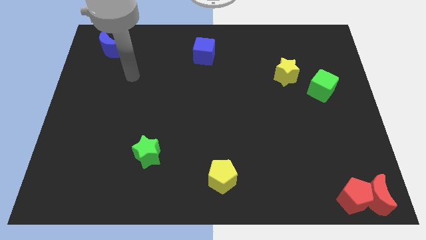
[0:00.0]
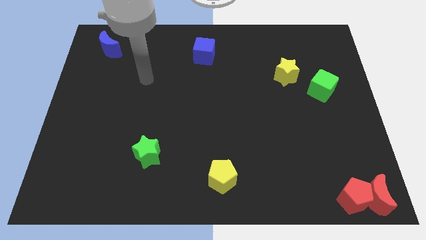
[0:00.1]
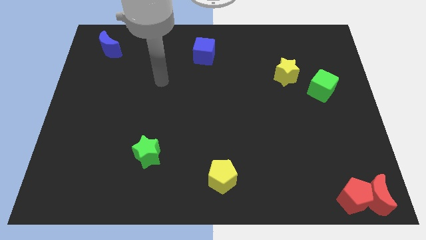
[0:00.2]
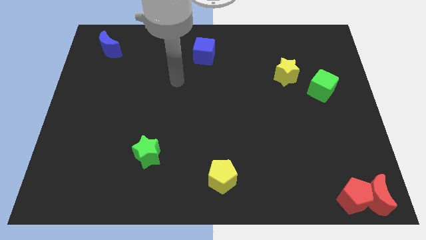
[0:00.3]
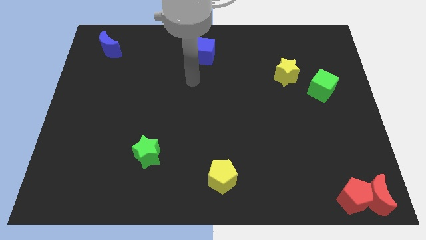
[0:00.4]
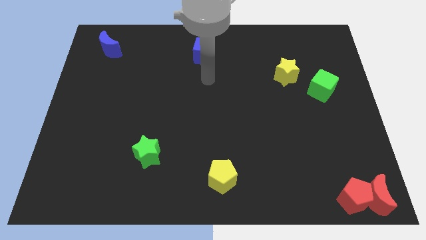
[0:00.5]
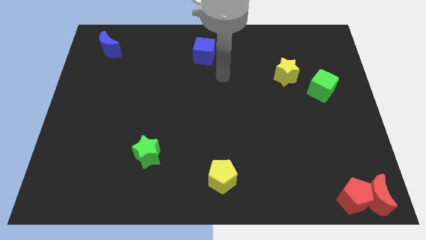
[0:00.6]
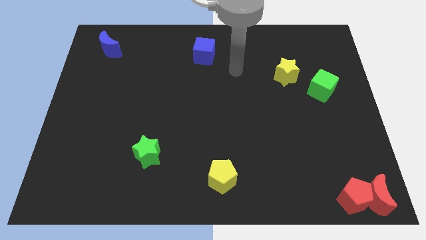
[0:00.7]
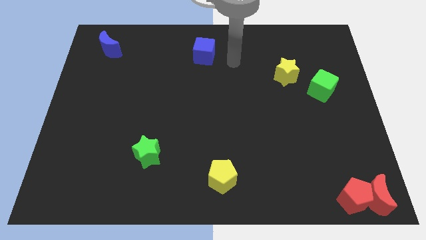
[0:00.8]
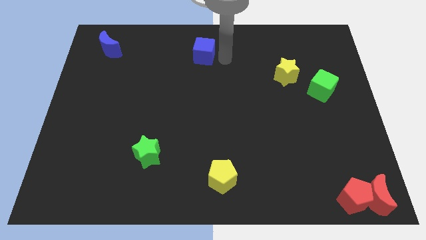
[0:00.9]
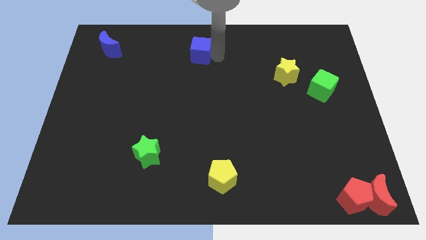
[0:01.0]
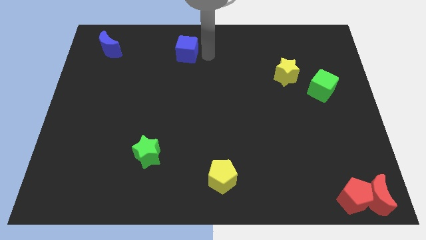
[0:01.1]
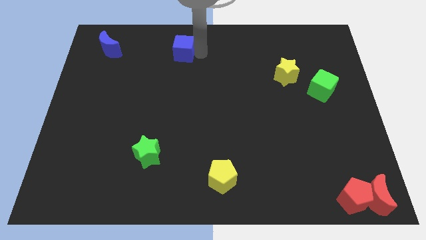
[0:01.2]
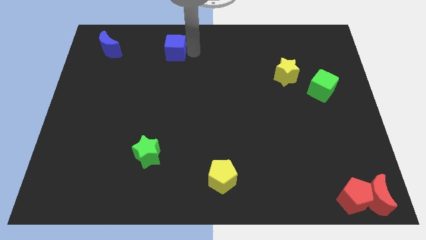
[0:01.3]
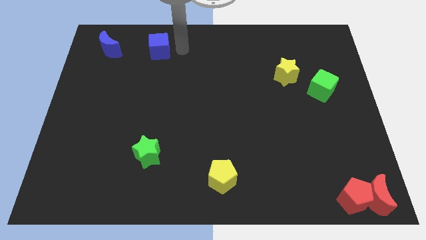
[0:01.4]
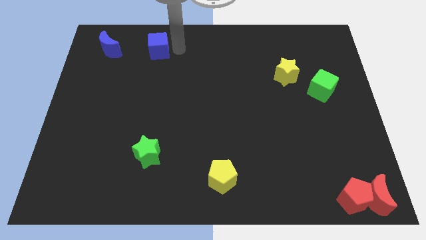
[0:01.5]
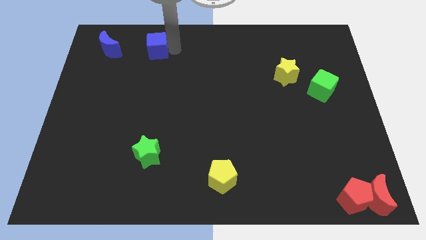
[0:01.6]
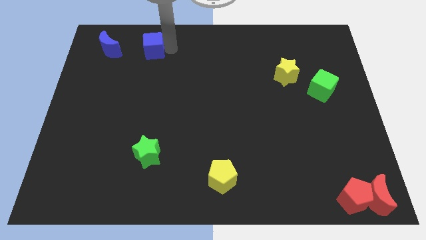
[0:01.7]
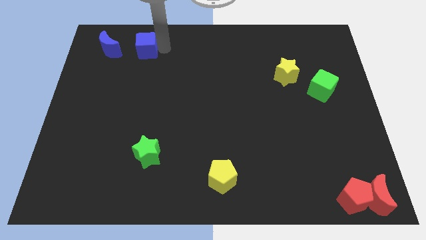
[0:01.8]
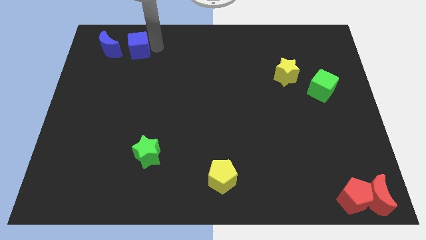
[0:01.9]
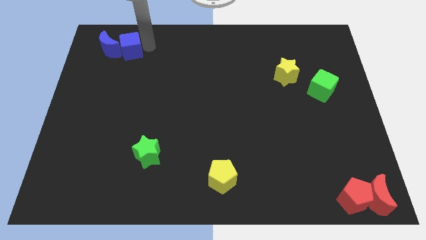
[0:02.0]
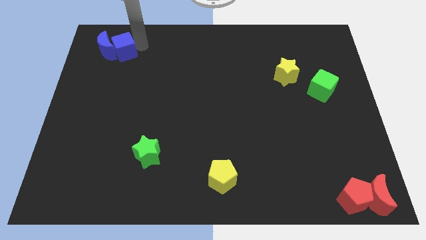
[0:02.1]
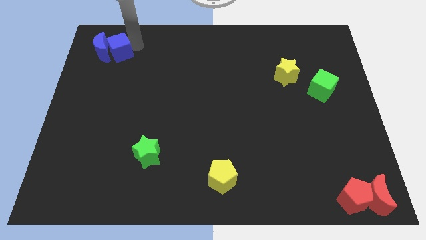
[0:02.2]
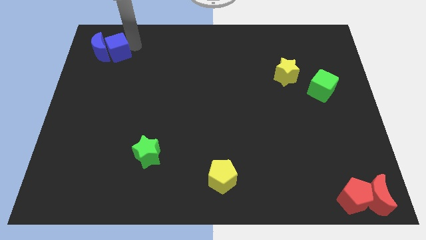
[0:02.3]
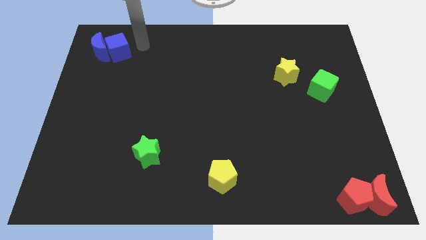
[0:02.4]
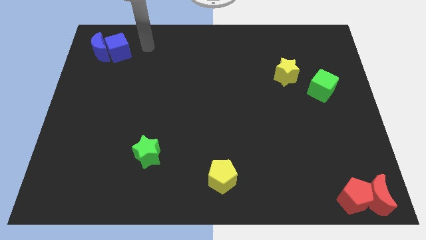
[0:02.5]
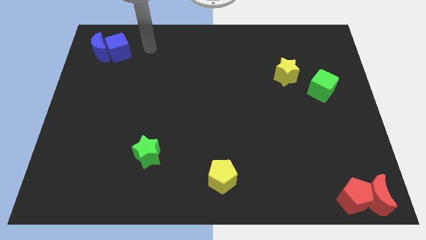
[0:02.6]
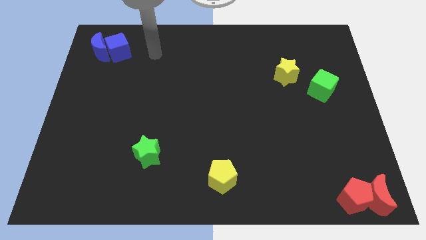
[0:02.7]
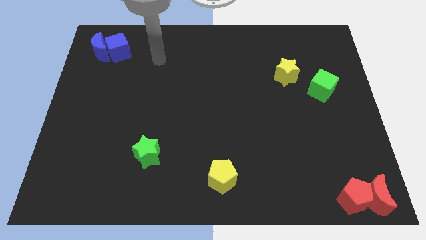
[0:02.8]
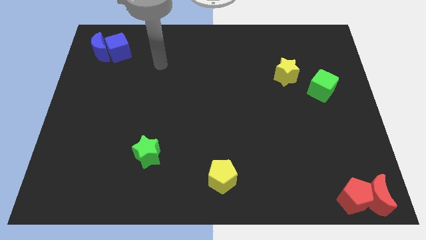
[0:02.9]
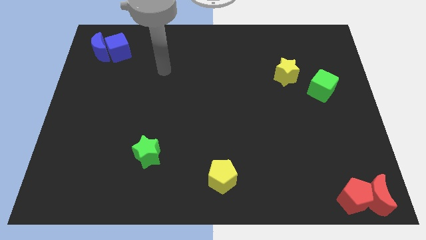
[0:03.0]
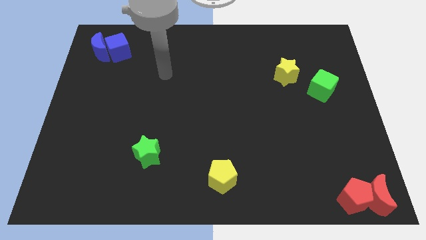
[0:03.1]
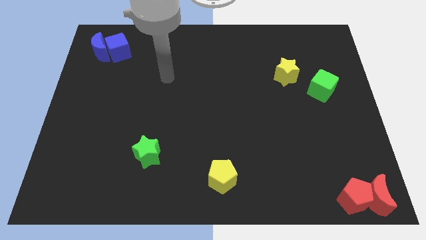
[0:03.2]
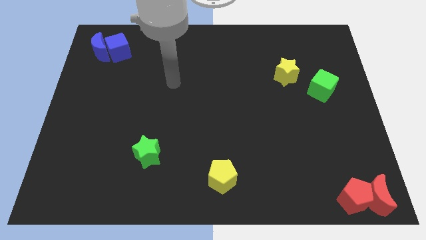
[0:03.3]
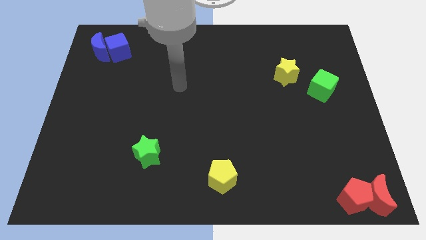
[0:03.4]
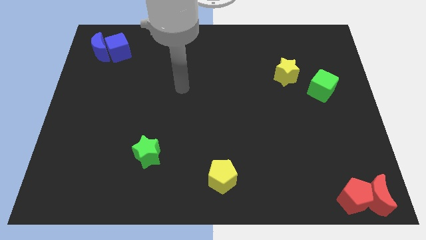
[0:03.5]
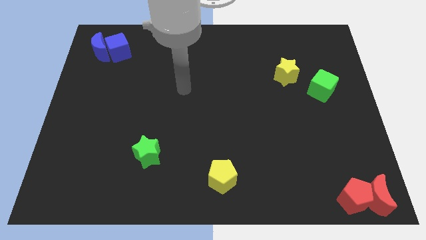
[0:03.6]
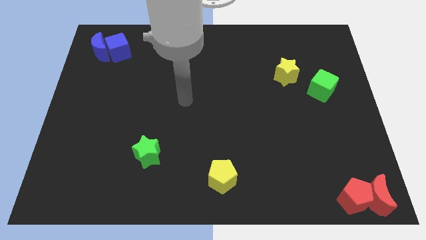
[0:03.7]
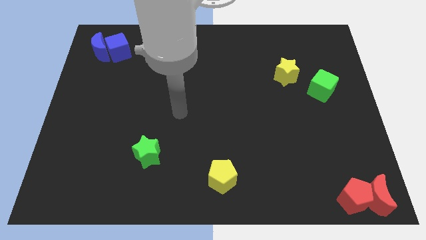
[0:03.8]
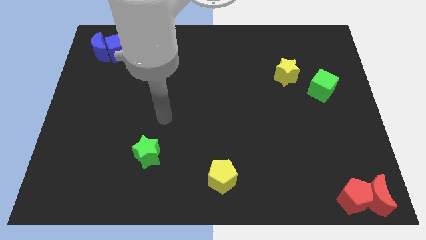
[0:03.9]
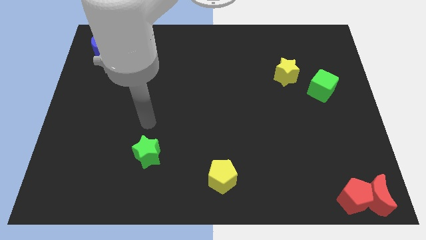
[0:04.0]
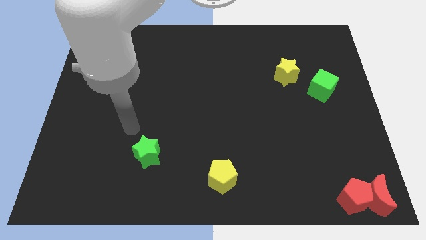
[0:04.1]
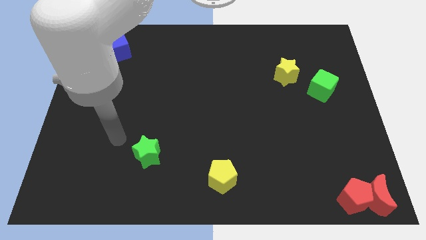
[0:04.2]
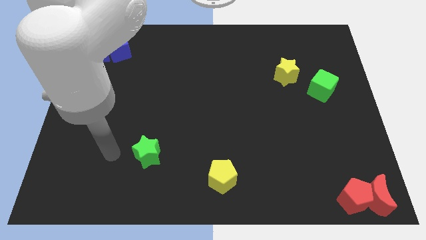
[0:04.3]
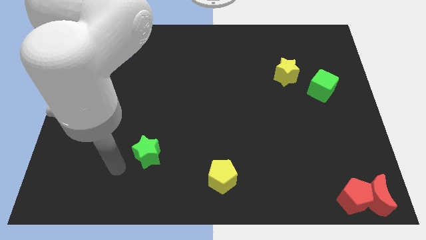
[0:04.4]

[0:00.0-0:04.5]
move the blue cube to the right of the blue crescent

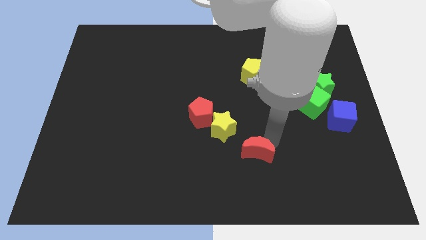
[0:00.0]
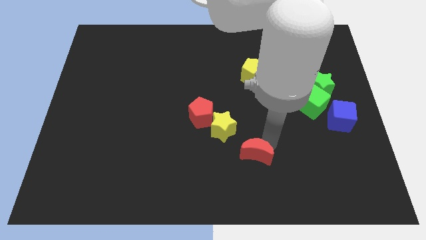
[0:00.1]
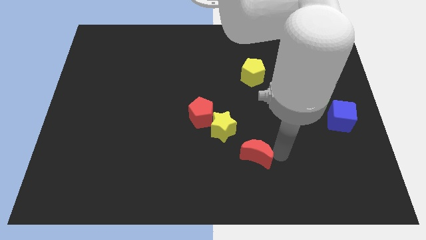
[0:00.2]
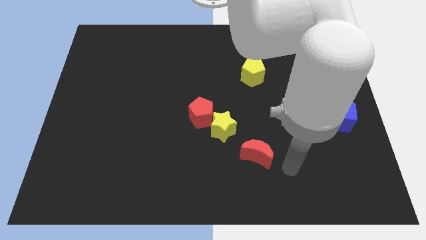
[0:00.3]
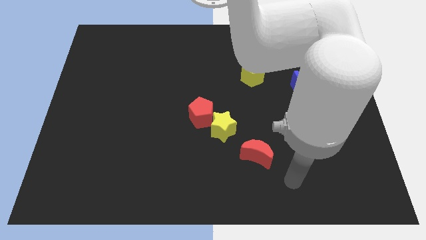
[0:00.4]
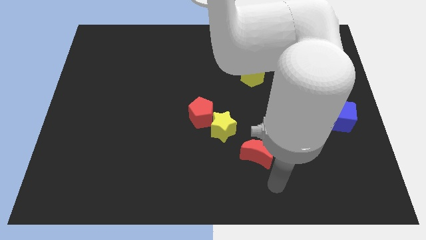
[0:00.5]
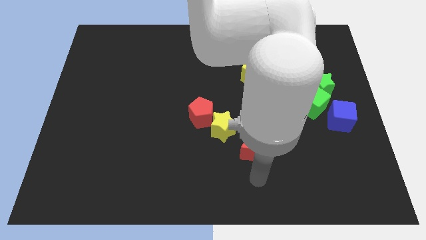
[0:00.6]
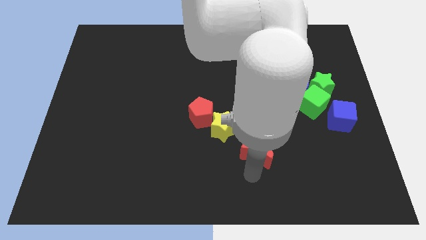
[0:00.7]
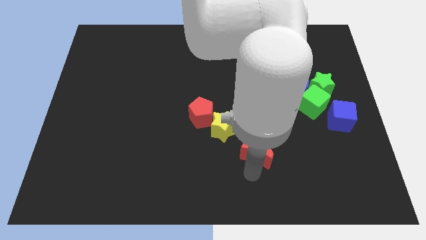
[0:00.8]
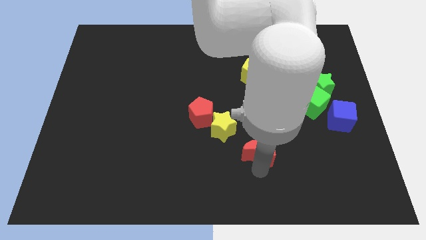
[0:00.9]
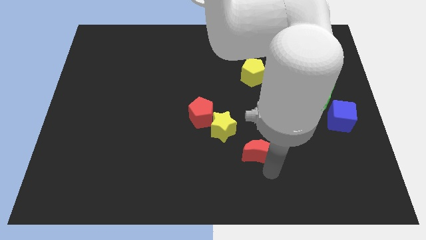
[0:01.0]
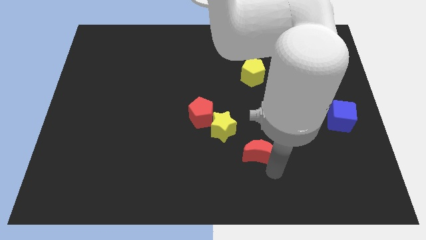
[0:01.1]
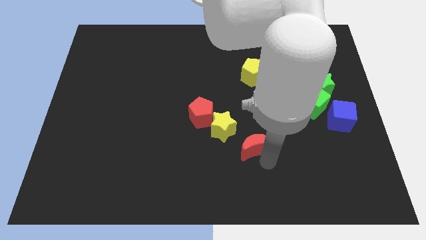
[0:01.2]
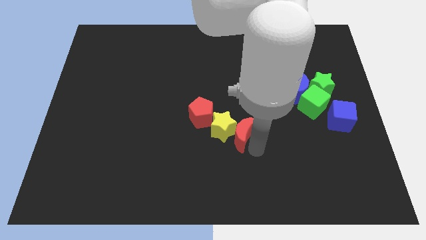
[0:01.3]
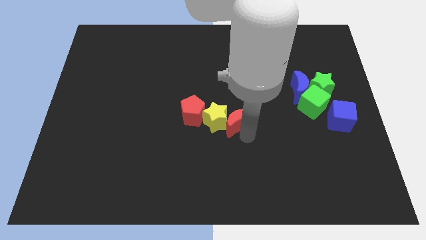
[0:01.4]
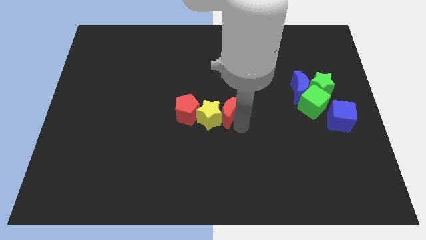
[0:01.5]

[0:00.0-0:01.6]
move the red moon into the yellow star

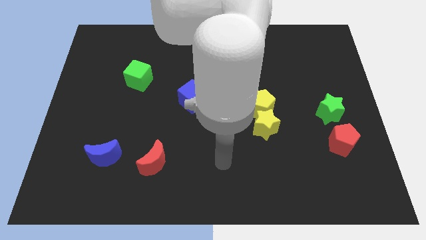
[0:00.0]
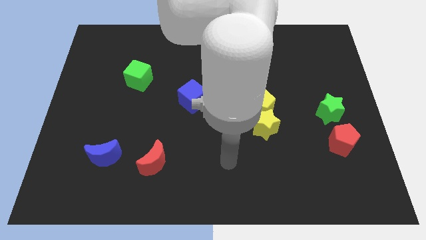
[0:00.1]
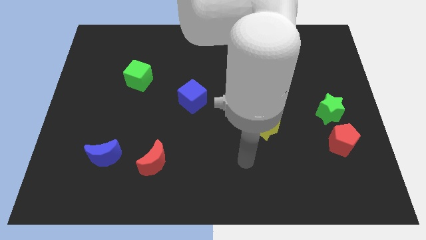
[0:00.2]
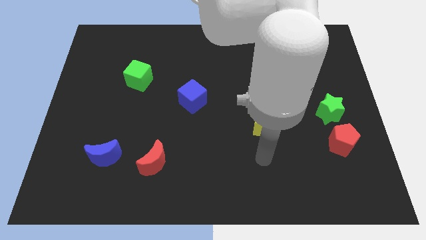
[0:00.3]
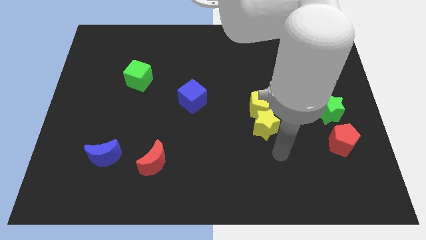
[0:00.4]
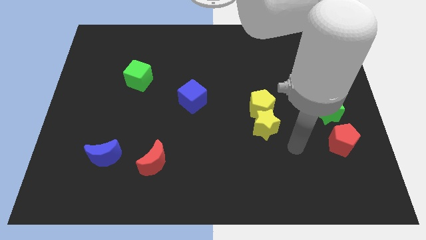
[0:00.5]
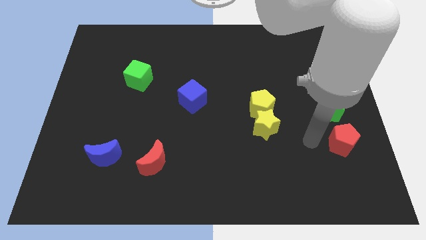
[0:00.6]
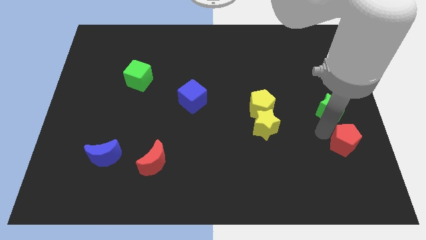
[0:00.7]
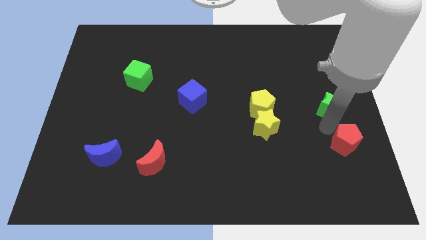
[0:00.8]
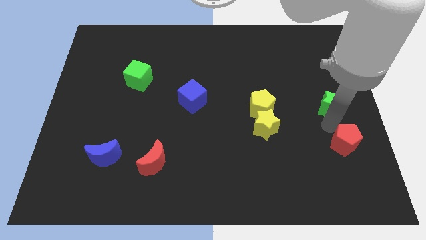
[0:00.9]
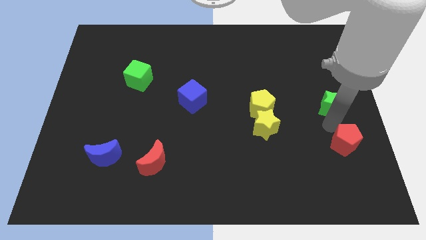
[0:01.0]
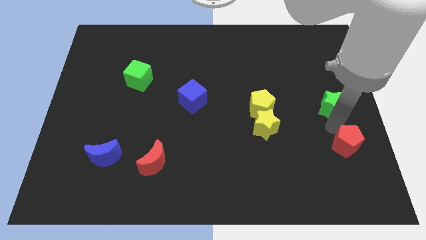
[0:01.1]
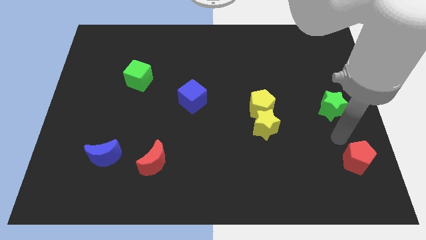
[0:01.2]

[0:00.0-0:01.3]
push the red pentagon slightly to the bottom

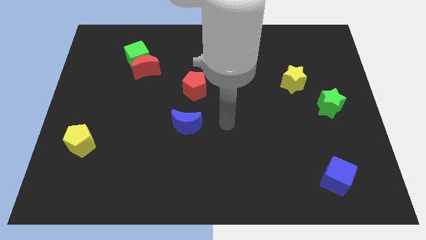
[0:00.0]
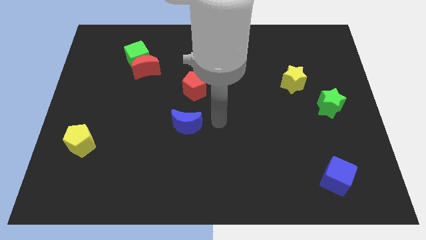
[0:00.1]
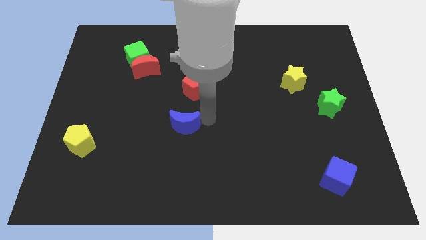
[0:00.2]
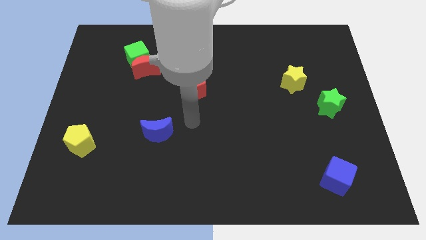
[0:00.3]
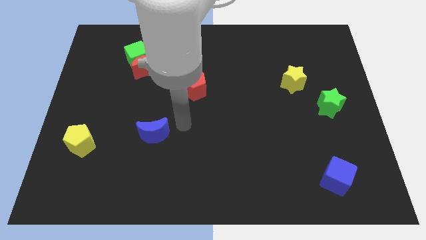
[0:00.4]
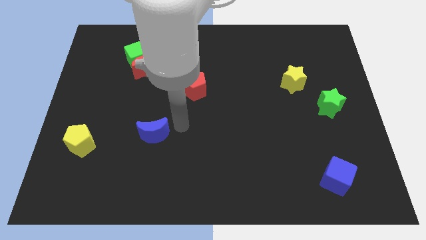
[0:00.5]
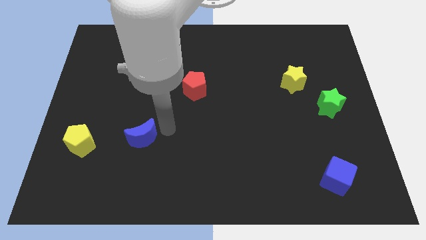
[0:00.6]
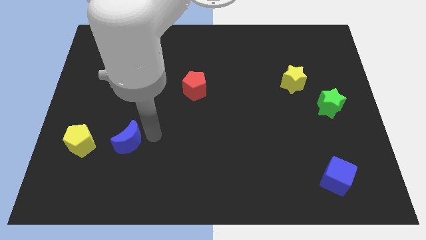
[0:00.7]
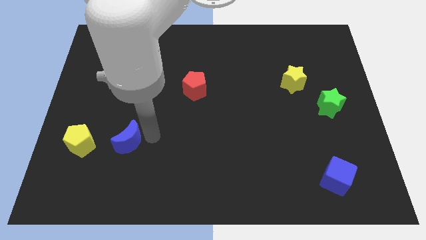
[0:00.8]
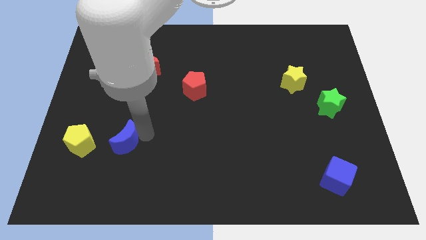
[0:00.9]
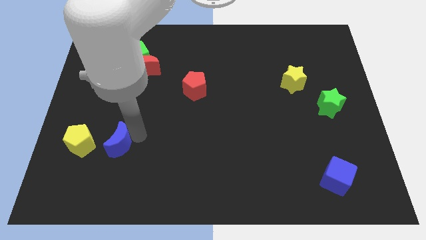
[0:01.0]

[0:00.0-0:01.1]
move blue moon right beside the yellow pentagon

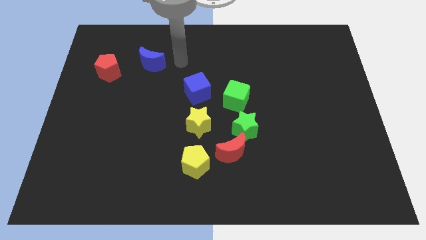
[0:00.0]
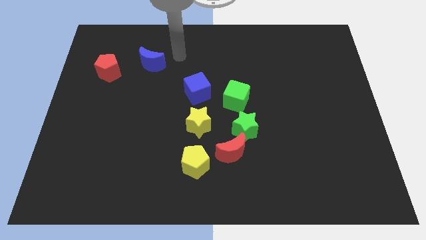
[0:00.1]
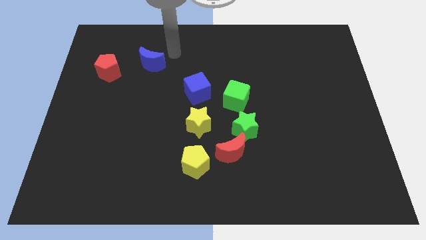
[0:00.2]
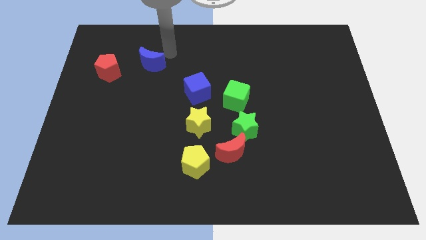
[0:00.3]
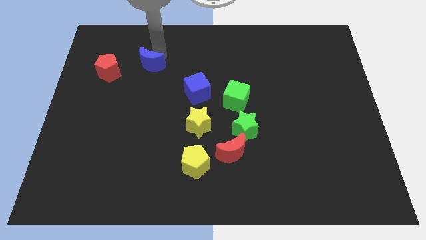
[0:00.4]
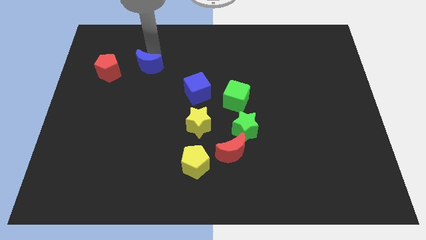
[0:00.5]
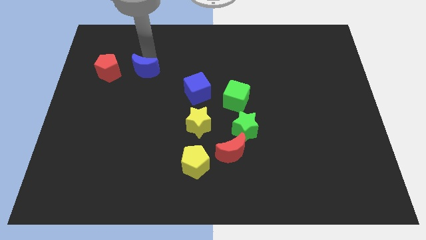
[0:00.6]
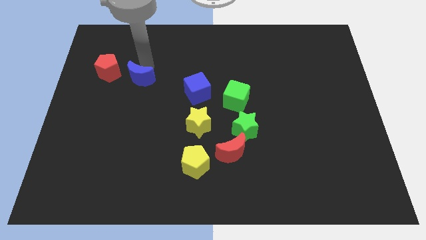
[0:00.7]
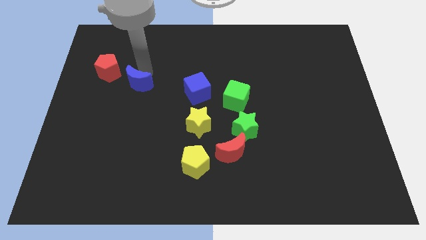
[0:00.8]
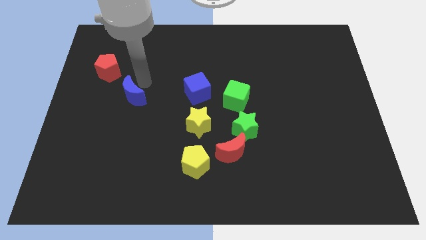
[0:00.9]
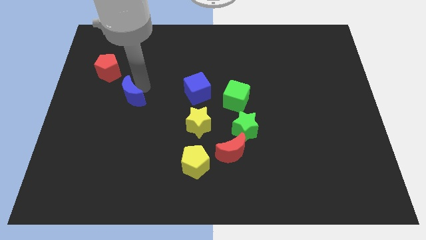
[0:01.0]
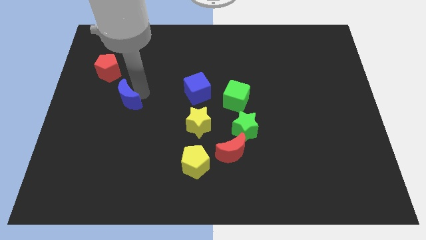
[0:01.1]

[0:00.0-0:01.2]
place blue moon to the left of blue cube
